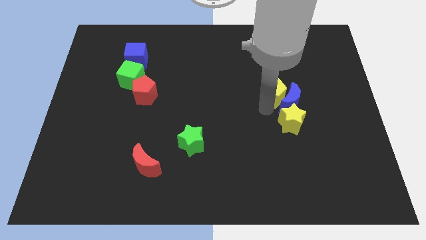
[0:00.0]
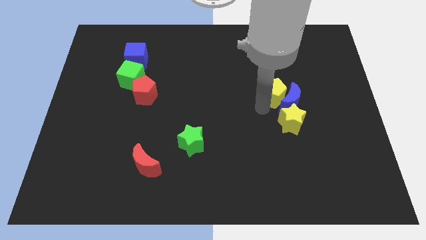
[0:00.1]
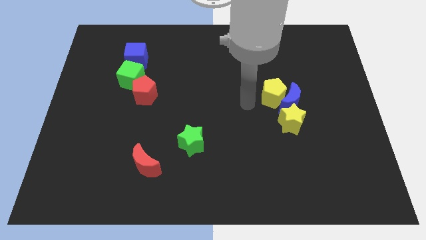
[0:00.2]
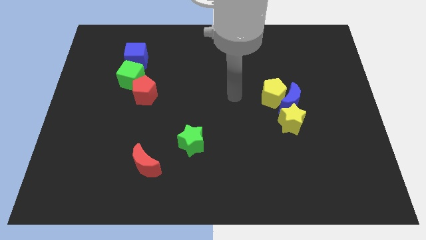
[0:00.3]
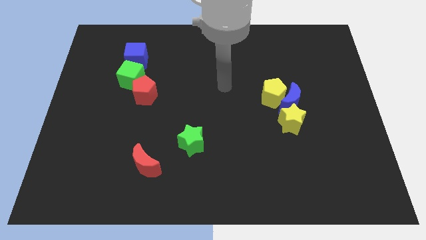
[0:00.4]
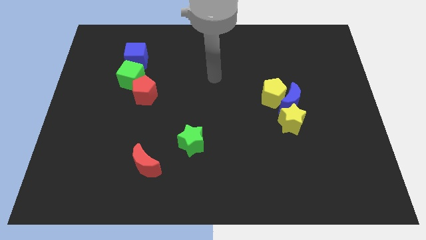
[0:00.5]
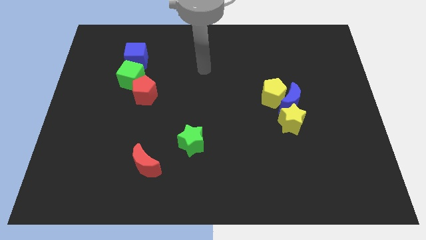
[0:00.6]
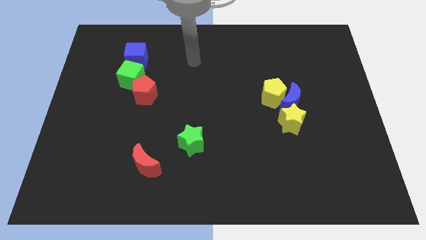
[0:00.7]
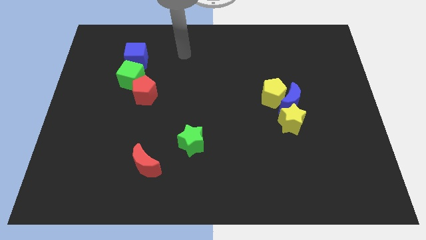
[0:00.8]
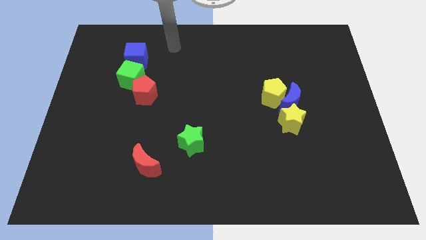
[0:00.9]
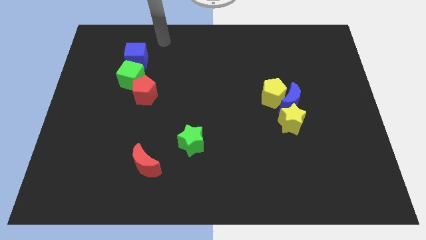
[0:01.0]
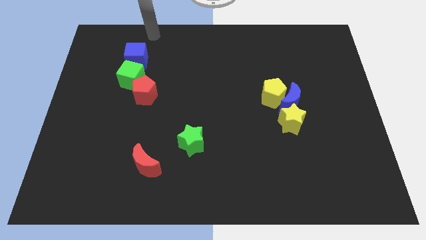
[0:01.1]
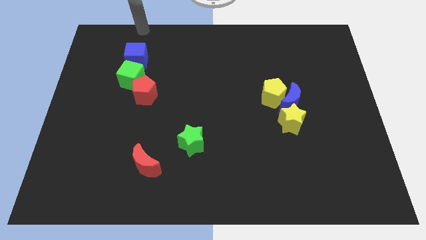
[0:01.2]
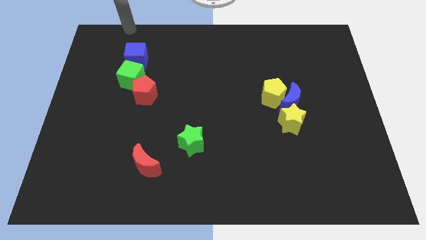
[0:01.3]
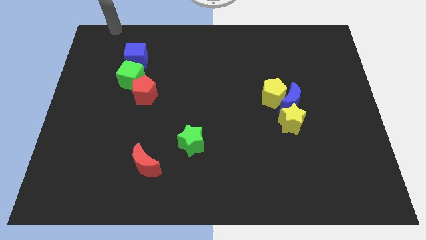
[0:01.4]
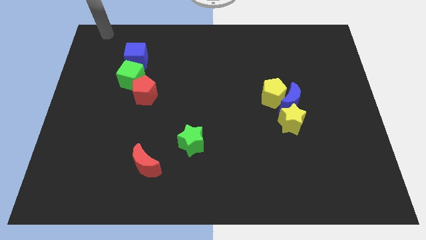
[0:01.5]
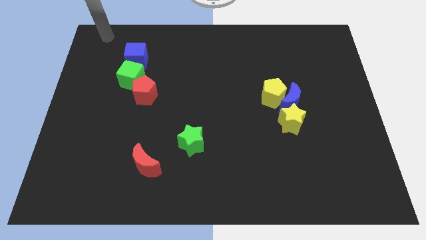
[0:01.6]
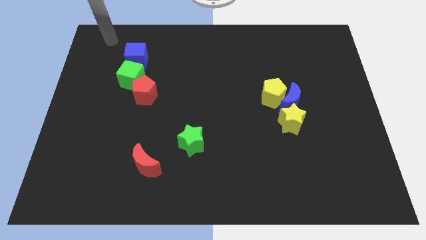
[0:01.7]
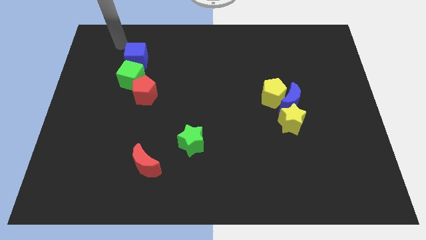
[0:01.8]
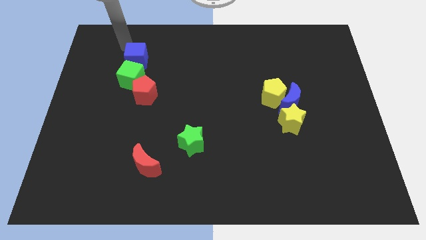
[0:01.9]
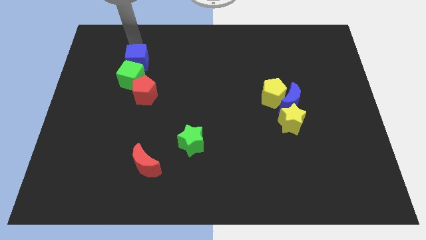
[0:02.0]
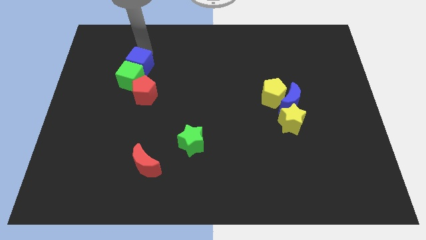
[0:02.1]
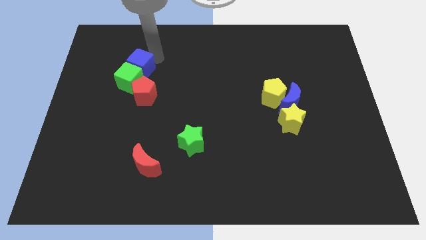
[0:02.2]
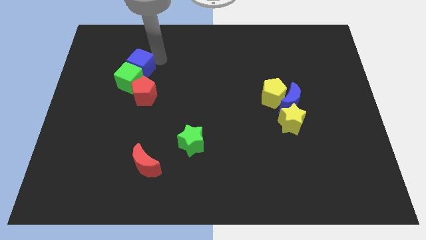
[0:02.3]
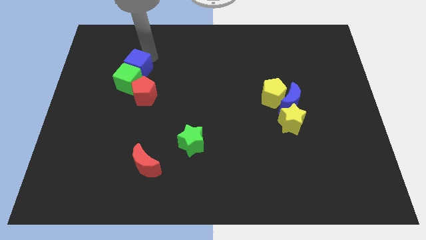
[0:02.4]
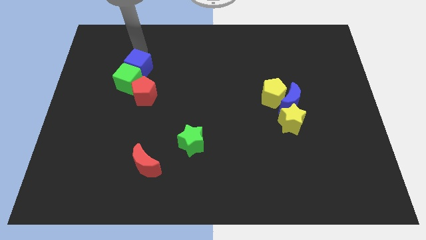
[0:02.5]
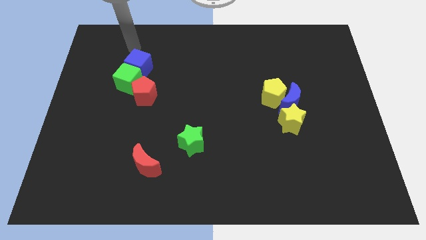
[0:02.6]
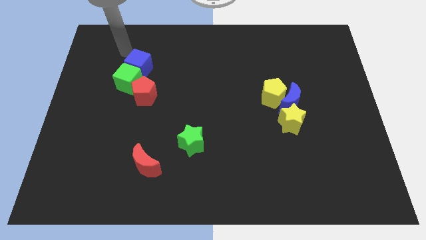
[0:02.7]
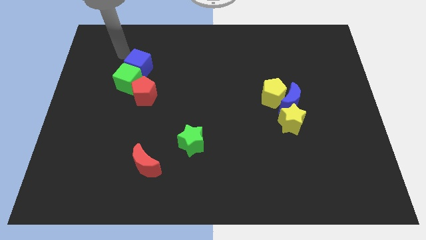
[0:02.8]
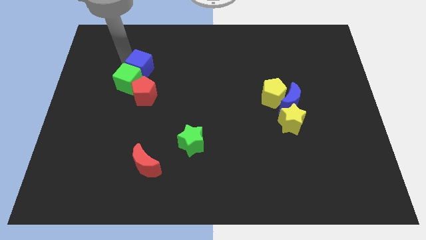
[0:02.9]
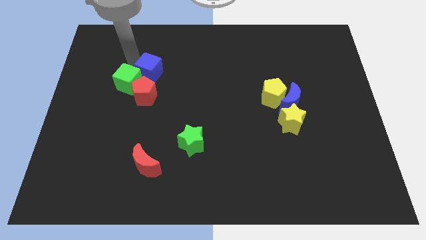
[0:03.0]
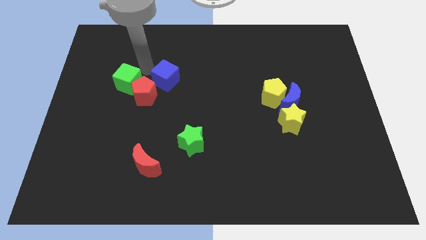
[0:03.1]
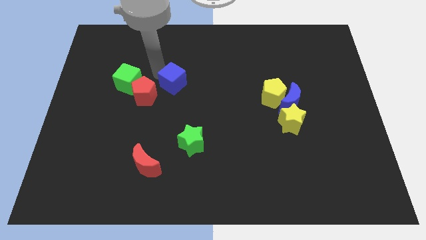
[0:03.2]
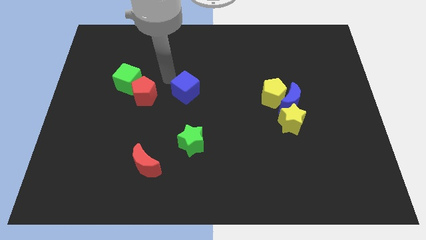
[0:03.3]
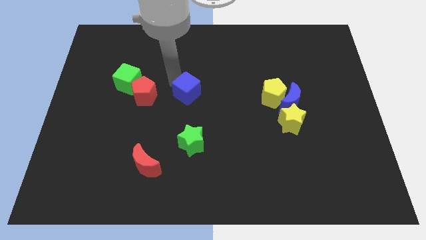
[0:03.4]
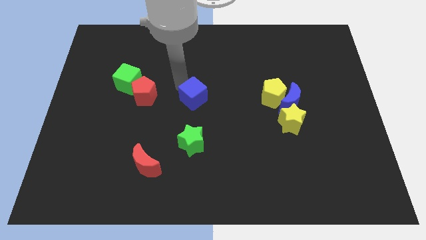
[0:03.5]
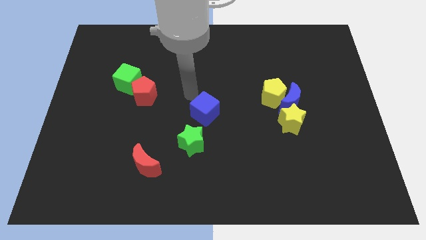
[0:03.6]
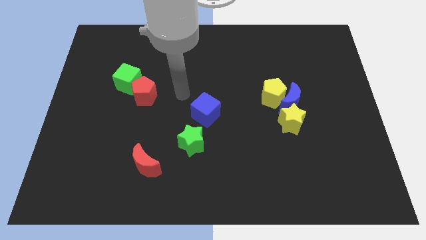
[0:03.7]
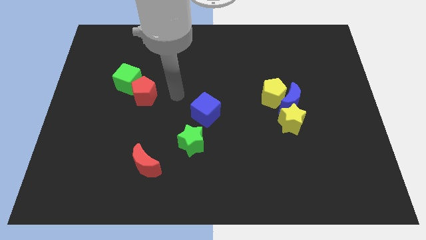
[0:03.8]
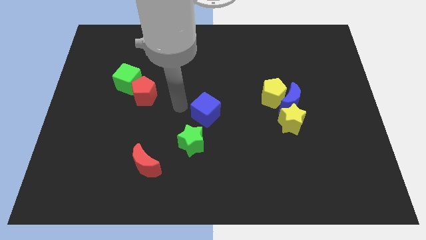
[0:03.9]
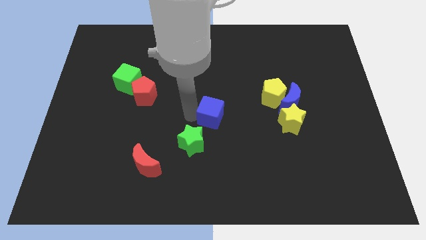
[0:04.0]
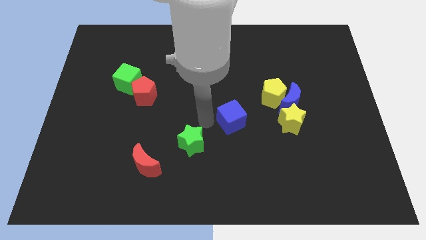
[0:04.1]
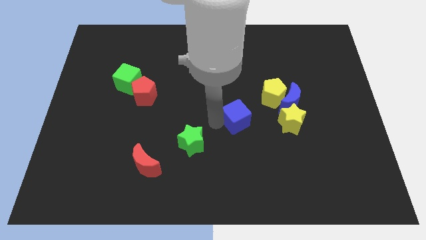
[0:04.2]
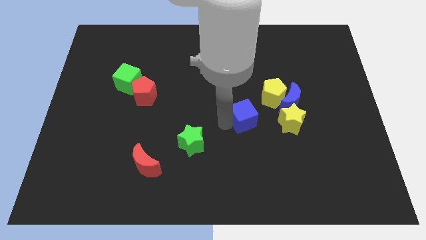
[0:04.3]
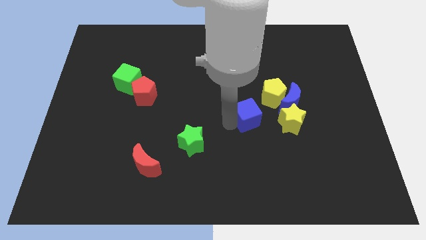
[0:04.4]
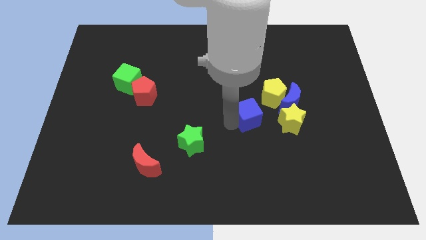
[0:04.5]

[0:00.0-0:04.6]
move the blue cube towards the left side of the group of blocks

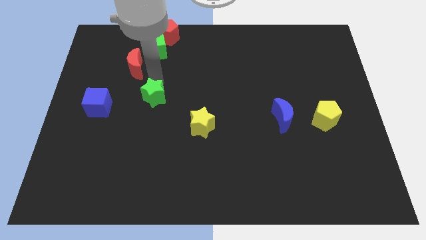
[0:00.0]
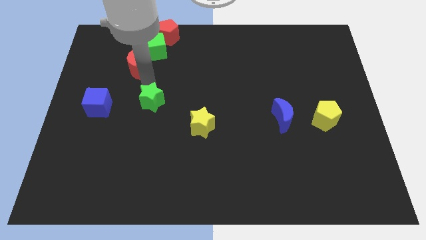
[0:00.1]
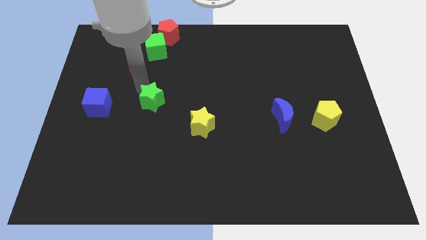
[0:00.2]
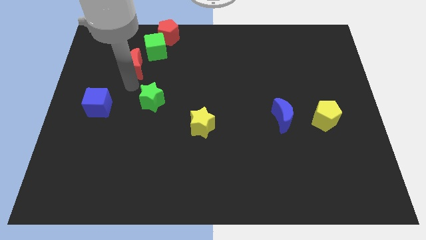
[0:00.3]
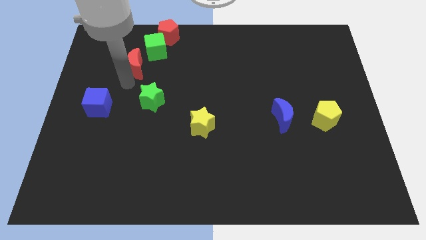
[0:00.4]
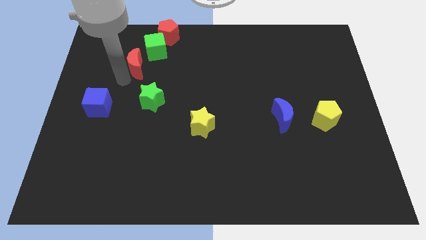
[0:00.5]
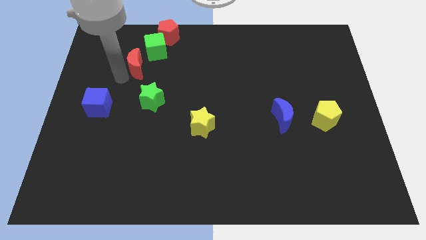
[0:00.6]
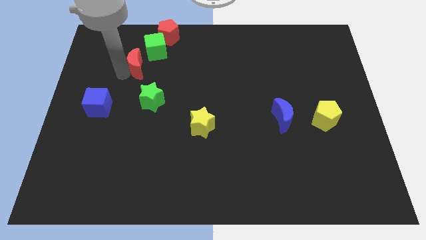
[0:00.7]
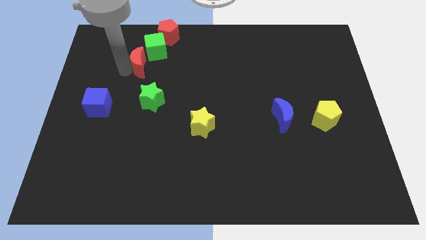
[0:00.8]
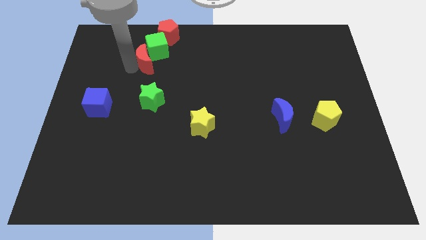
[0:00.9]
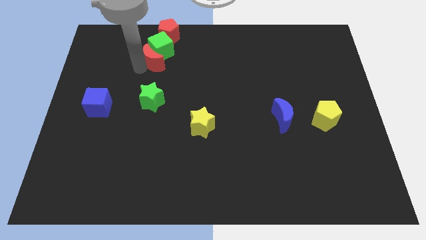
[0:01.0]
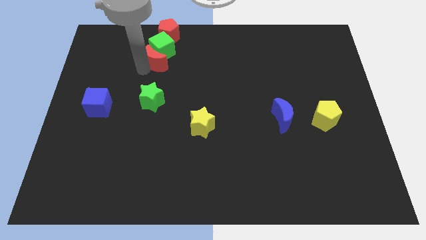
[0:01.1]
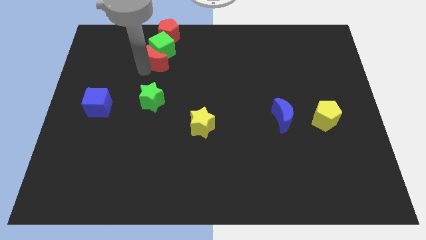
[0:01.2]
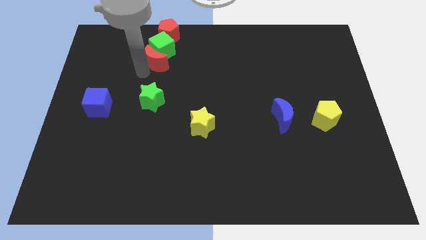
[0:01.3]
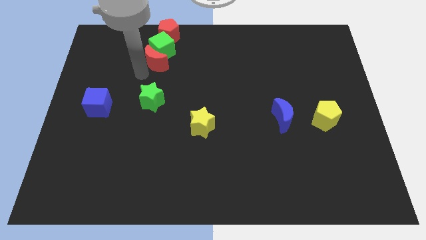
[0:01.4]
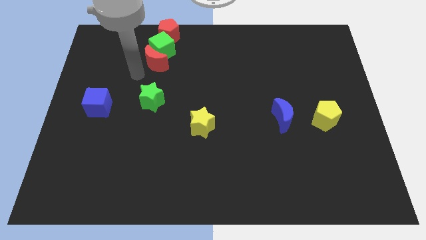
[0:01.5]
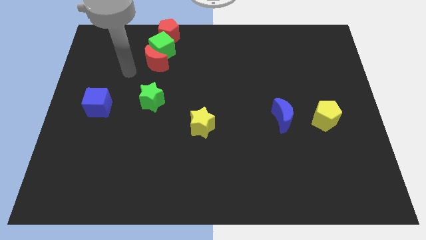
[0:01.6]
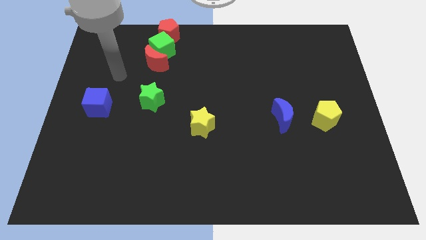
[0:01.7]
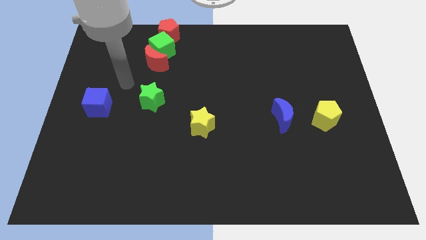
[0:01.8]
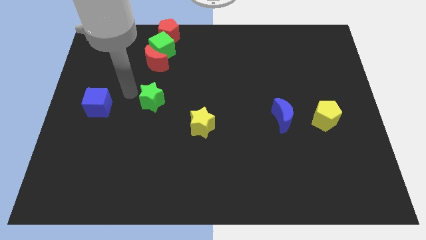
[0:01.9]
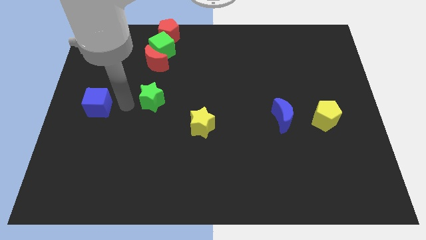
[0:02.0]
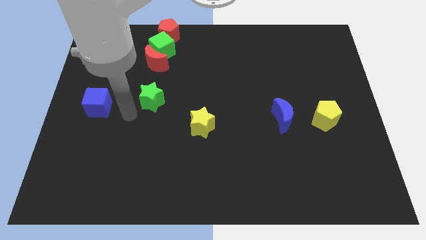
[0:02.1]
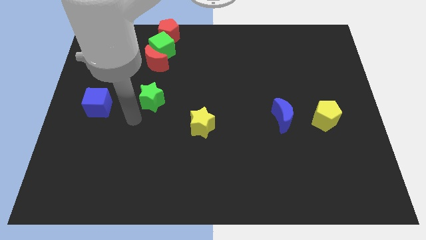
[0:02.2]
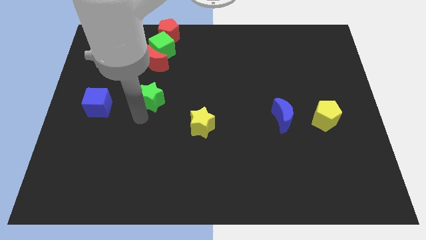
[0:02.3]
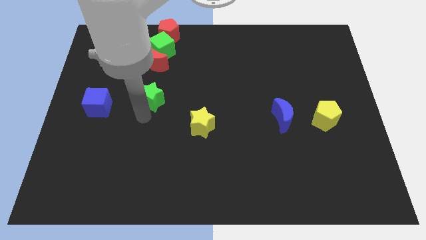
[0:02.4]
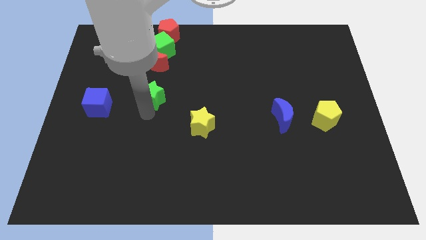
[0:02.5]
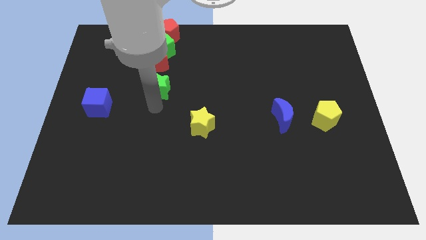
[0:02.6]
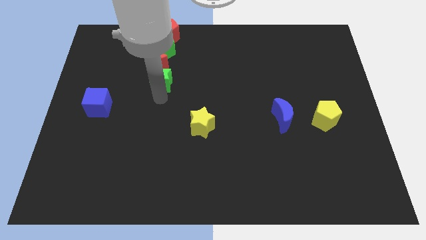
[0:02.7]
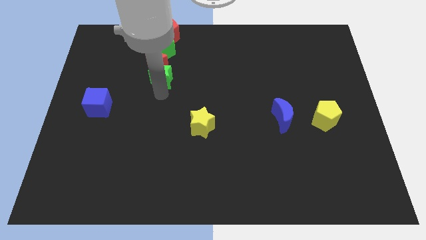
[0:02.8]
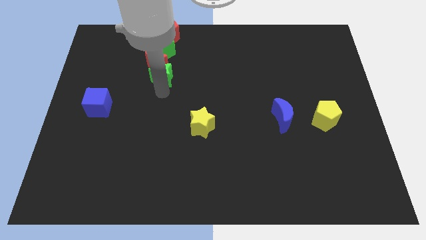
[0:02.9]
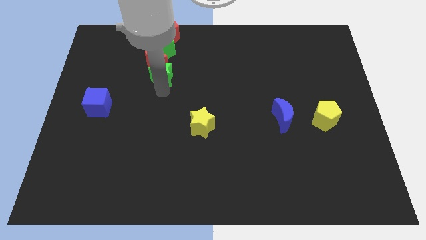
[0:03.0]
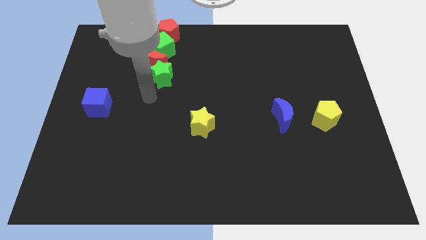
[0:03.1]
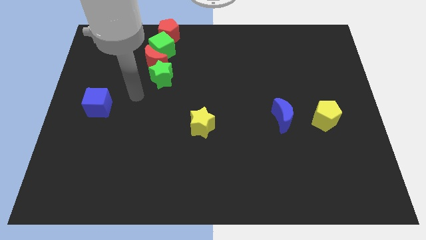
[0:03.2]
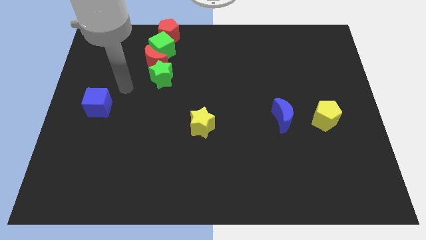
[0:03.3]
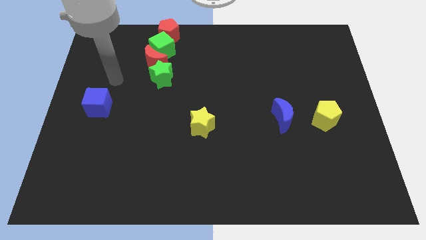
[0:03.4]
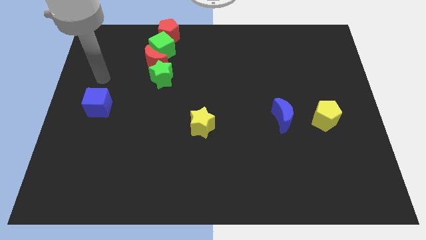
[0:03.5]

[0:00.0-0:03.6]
place the green star vertically below the red moon

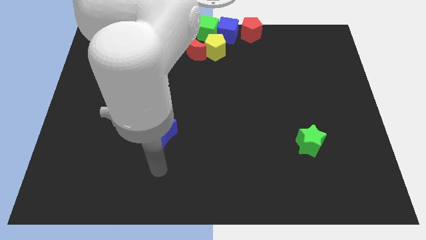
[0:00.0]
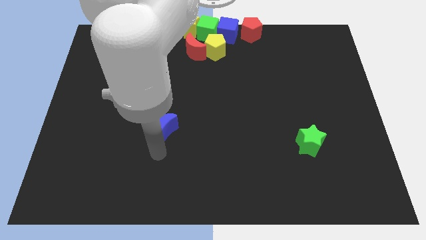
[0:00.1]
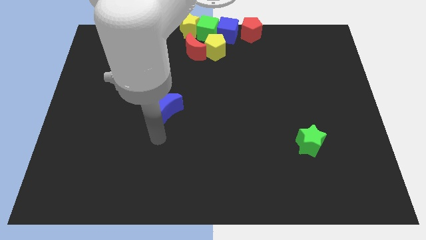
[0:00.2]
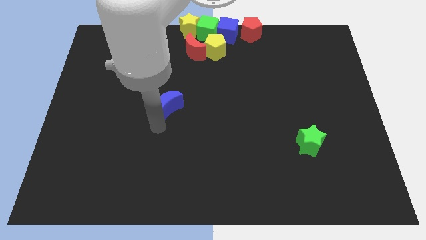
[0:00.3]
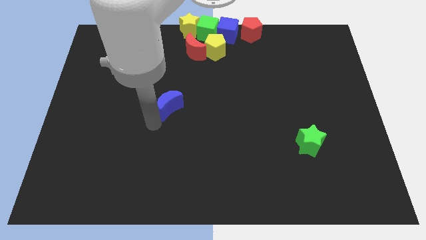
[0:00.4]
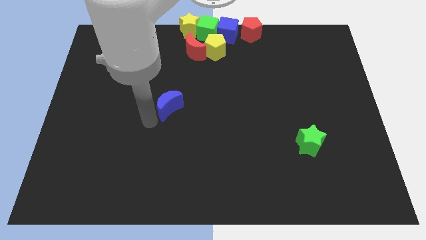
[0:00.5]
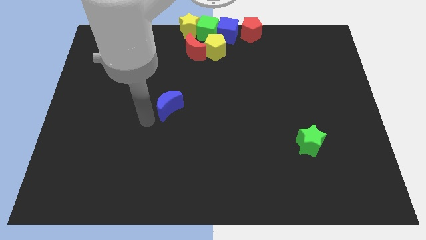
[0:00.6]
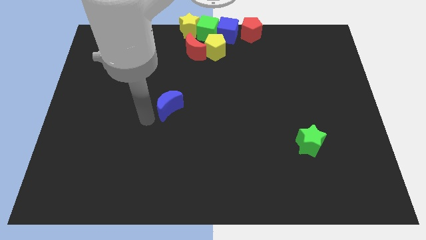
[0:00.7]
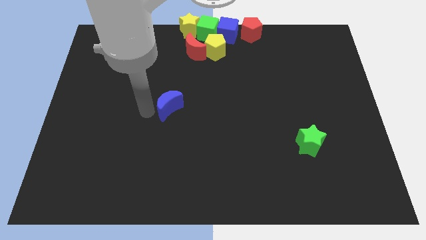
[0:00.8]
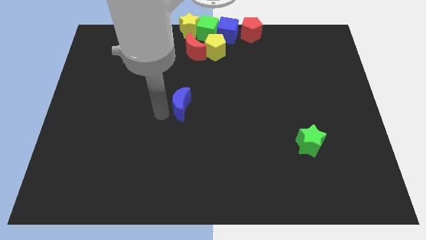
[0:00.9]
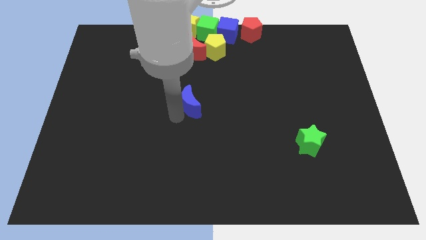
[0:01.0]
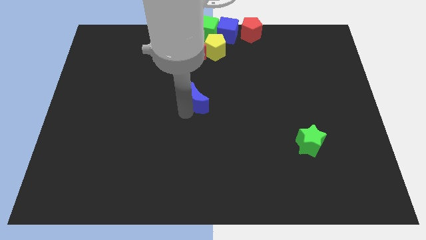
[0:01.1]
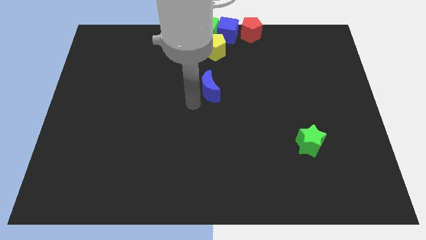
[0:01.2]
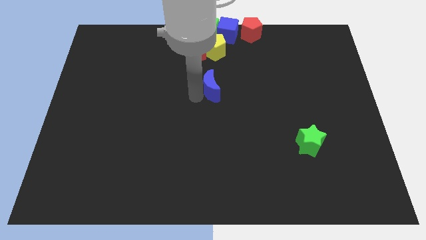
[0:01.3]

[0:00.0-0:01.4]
move the blue crescent to the center of the board
